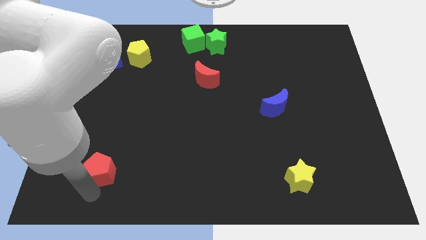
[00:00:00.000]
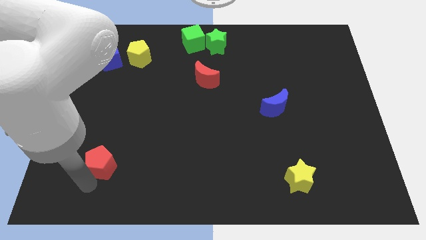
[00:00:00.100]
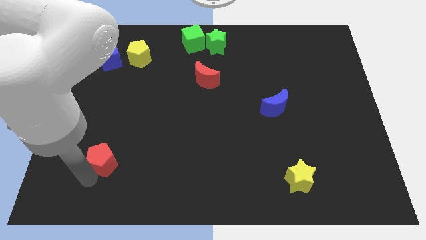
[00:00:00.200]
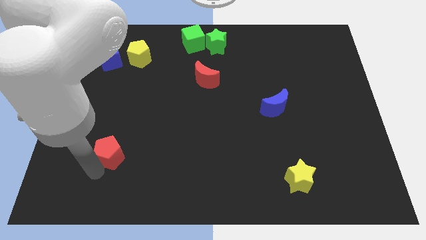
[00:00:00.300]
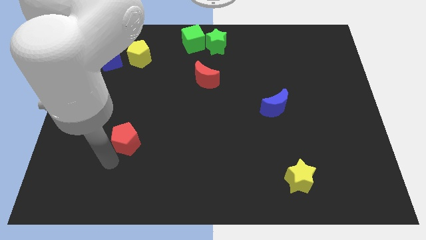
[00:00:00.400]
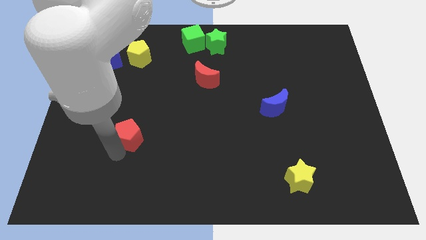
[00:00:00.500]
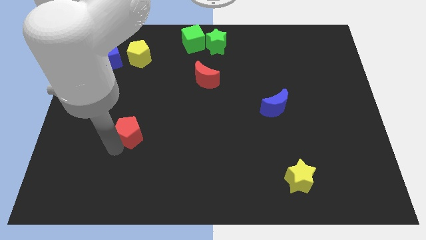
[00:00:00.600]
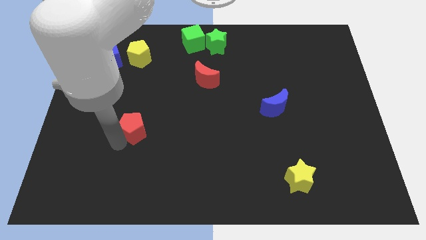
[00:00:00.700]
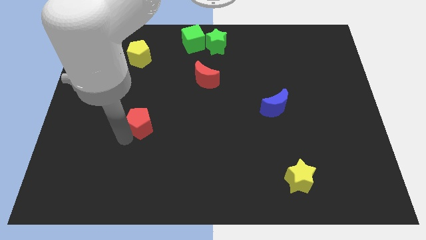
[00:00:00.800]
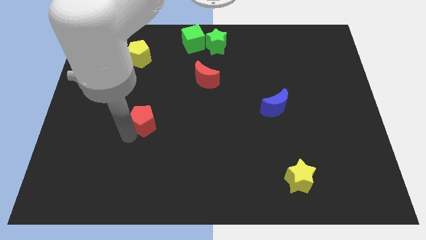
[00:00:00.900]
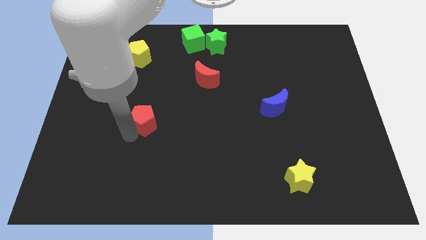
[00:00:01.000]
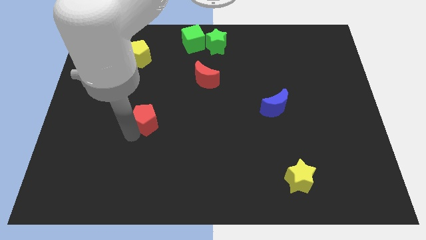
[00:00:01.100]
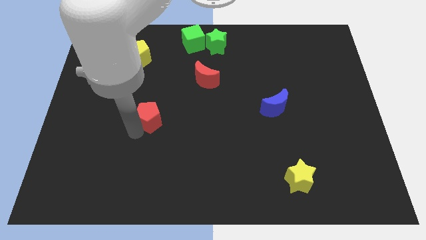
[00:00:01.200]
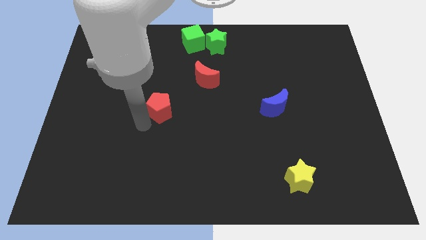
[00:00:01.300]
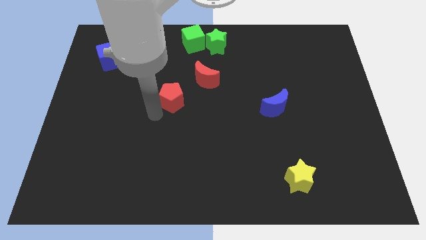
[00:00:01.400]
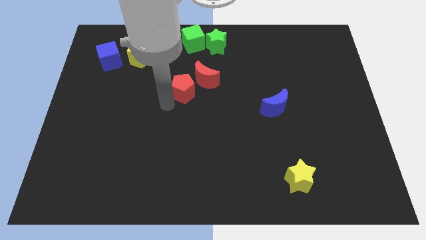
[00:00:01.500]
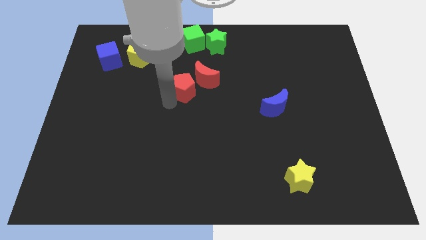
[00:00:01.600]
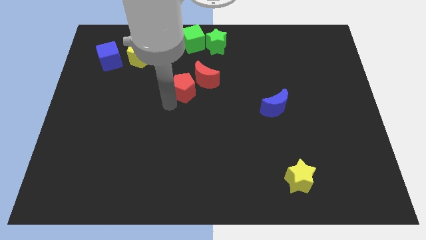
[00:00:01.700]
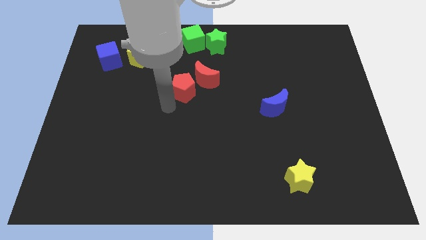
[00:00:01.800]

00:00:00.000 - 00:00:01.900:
place the red pentagon to the left of red moon

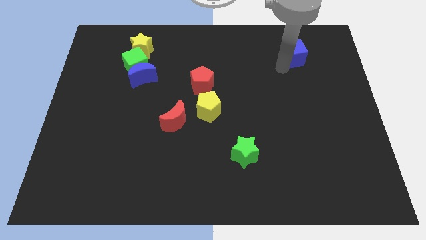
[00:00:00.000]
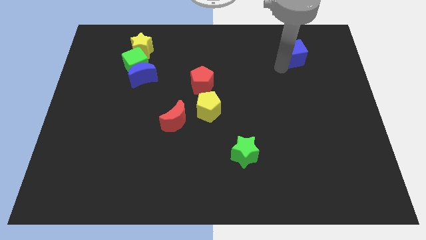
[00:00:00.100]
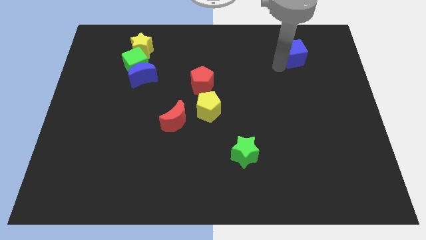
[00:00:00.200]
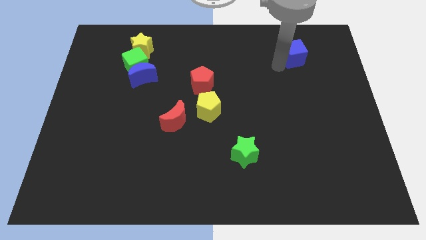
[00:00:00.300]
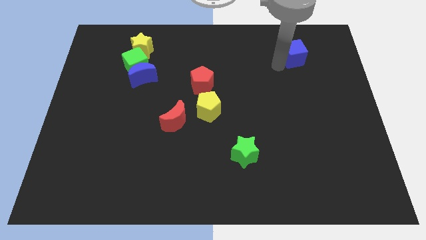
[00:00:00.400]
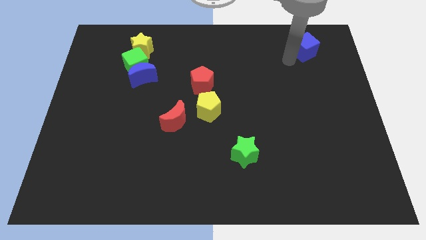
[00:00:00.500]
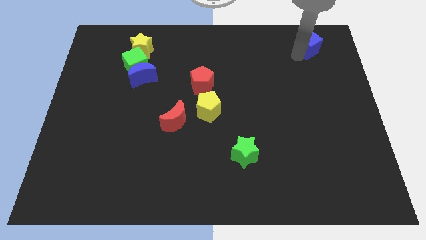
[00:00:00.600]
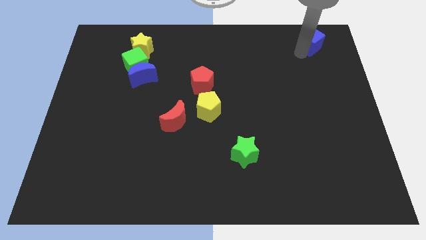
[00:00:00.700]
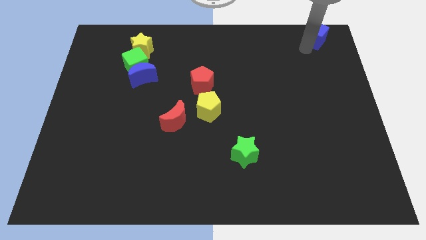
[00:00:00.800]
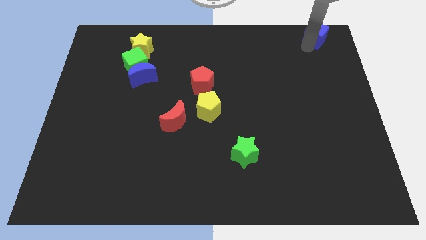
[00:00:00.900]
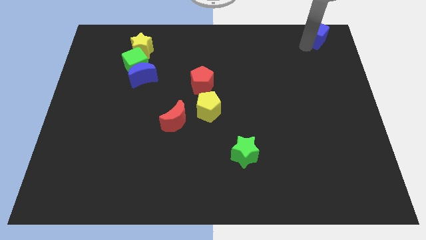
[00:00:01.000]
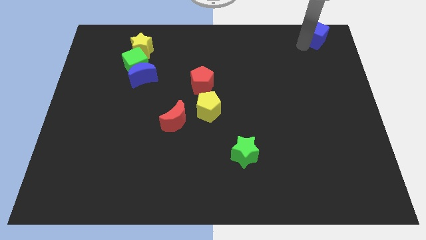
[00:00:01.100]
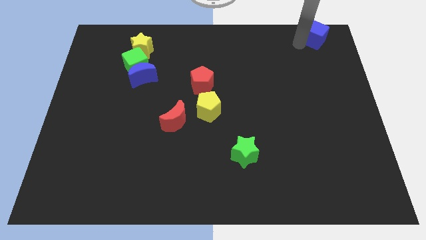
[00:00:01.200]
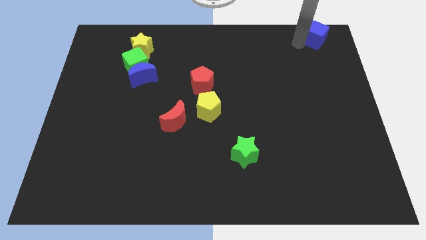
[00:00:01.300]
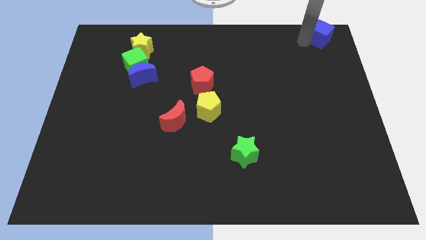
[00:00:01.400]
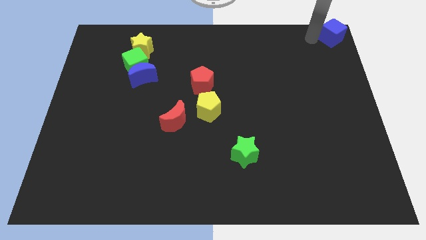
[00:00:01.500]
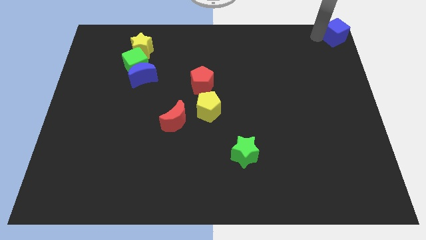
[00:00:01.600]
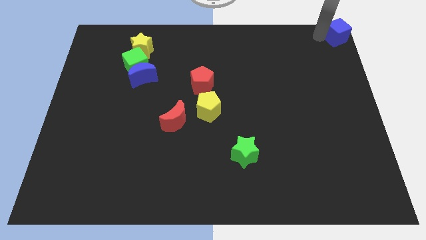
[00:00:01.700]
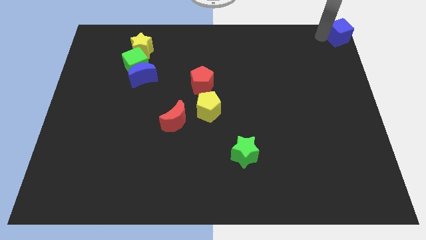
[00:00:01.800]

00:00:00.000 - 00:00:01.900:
push the blue cube to the top right corner of the board

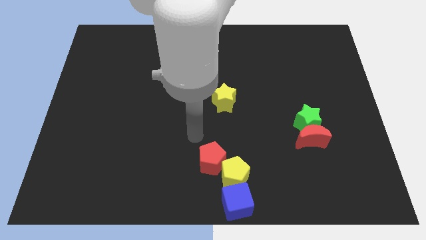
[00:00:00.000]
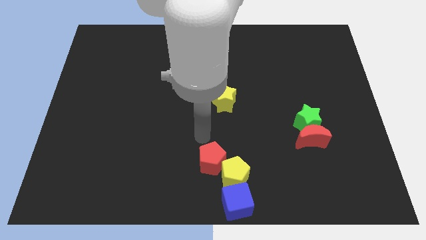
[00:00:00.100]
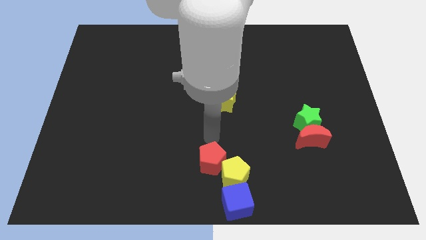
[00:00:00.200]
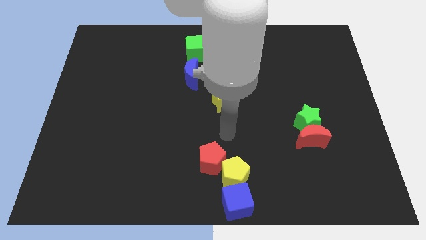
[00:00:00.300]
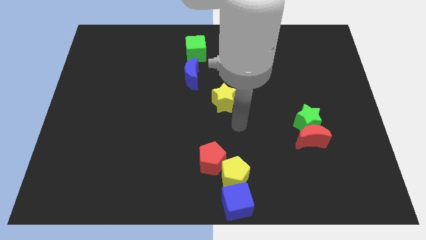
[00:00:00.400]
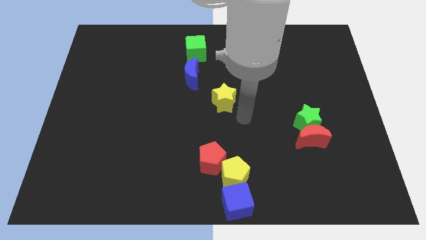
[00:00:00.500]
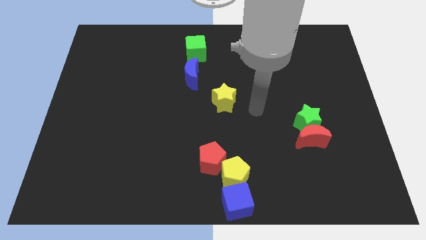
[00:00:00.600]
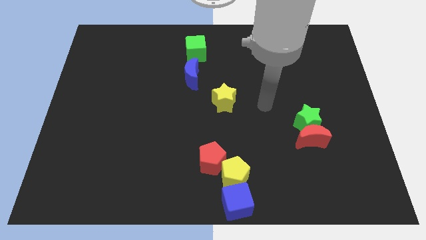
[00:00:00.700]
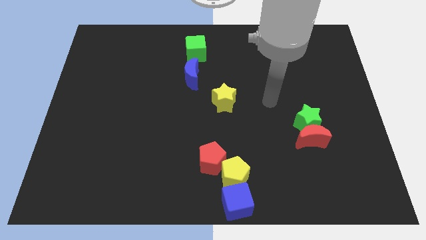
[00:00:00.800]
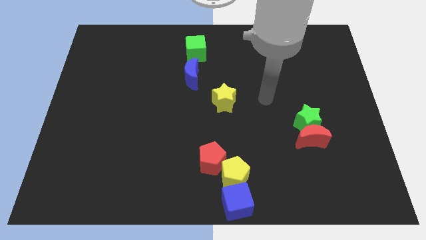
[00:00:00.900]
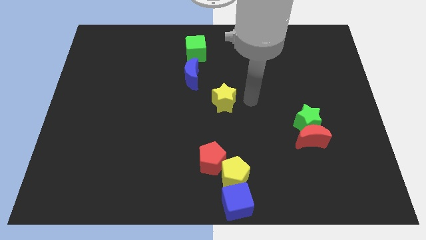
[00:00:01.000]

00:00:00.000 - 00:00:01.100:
place your arm at the right of the yellow star

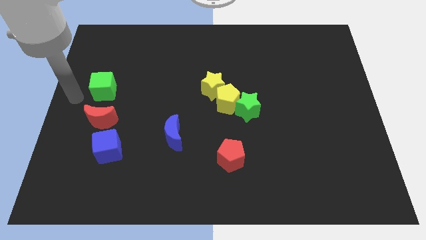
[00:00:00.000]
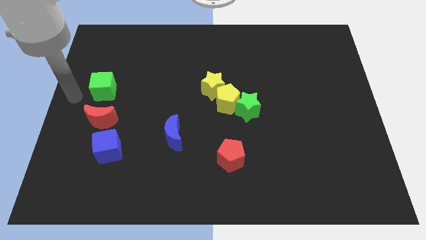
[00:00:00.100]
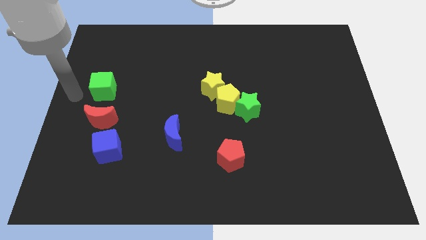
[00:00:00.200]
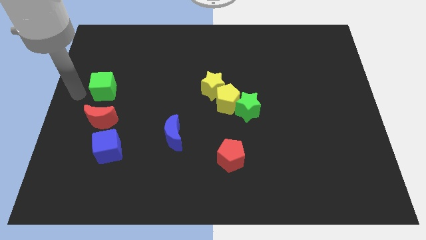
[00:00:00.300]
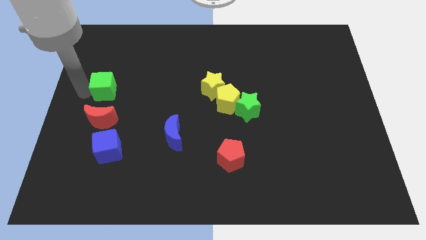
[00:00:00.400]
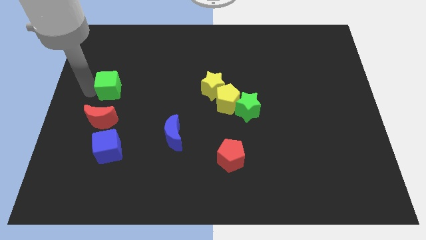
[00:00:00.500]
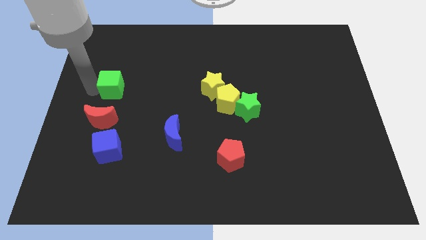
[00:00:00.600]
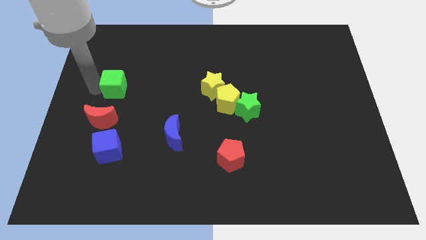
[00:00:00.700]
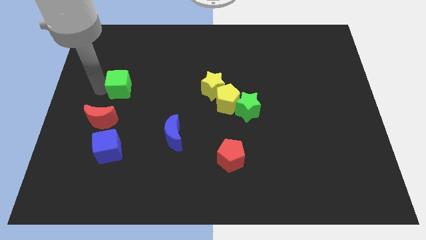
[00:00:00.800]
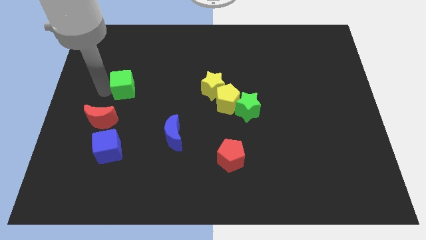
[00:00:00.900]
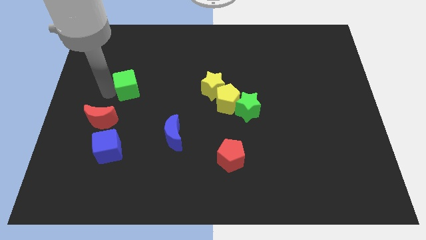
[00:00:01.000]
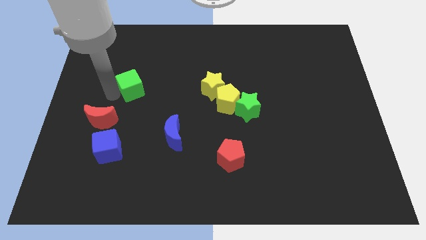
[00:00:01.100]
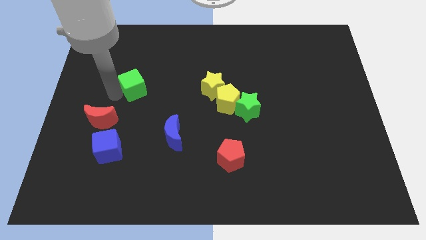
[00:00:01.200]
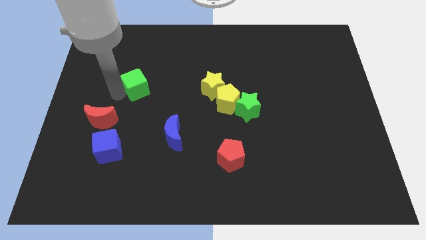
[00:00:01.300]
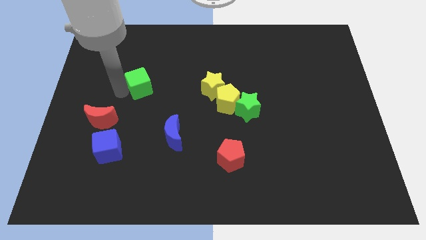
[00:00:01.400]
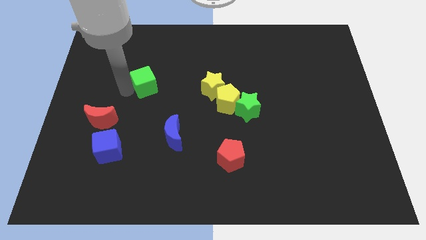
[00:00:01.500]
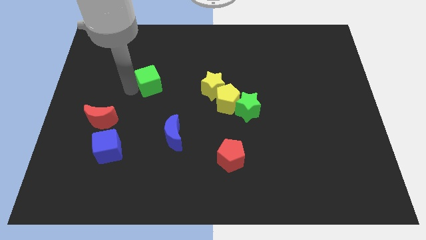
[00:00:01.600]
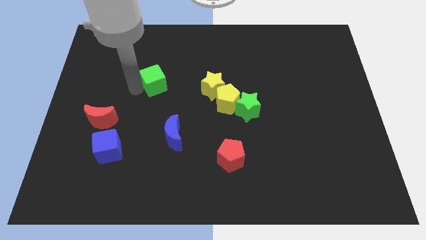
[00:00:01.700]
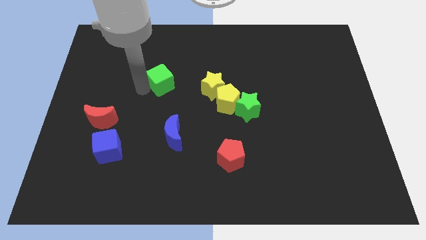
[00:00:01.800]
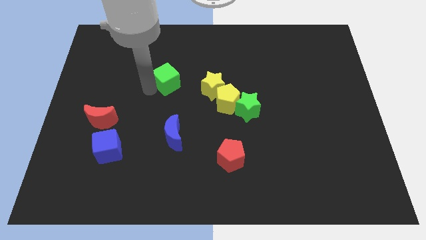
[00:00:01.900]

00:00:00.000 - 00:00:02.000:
move the green cube above blue moon

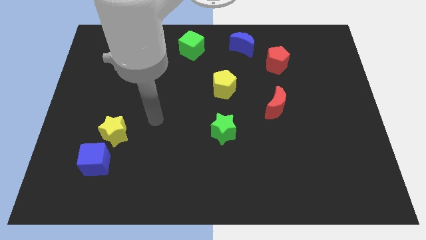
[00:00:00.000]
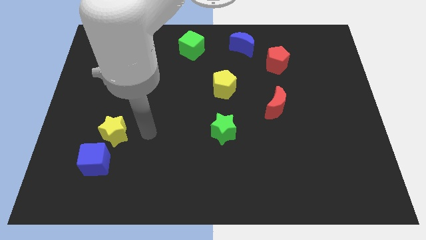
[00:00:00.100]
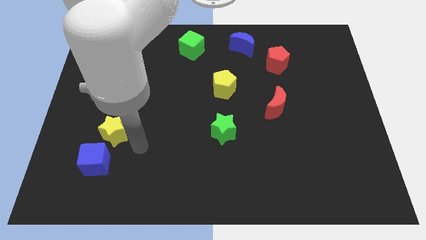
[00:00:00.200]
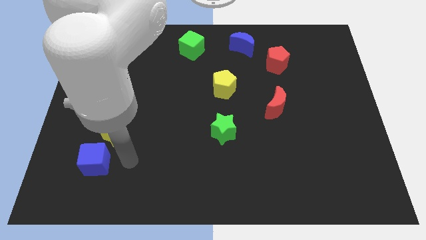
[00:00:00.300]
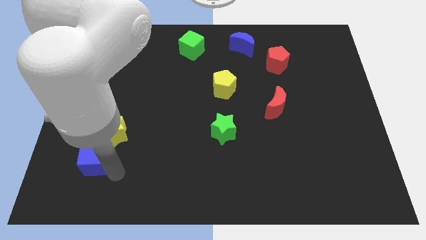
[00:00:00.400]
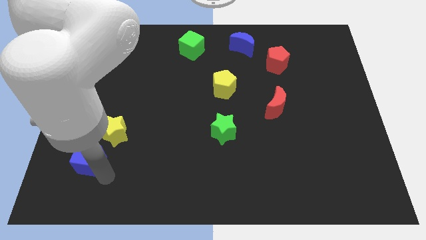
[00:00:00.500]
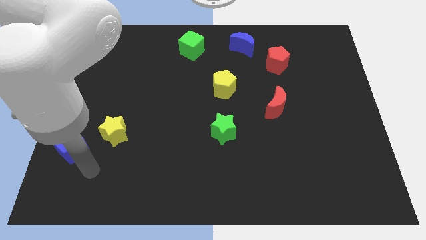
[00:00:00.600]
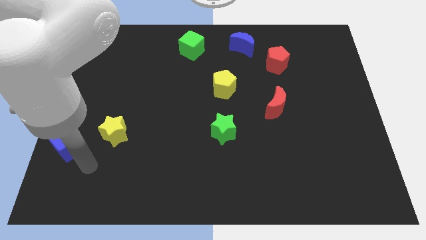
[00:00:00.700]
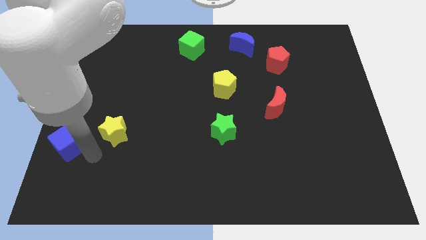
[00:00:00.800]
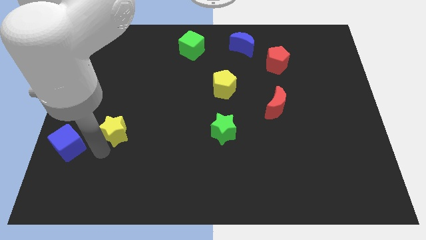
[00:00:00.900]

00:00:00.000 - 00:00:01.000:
push the blue cube slightly to the left

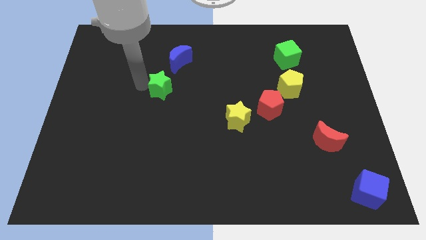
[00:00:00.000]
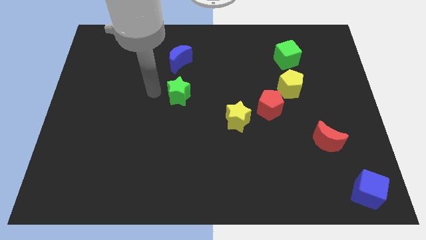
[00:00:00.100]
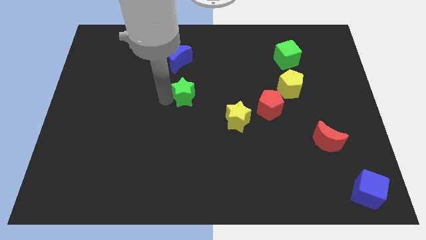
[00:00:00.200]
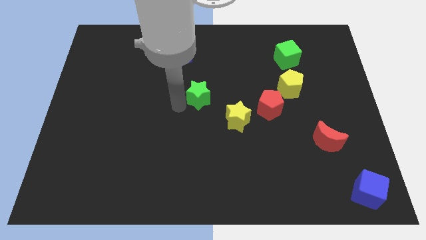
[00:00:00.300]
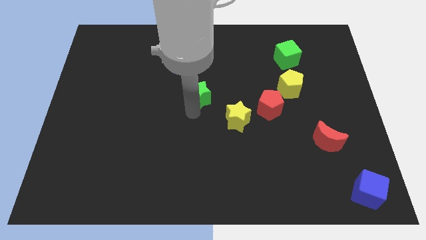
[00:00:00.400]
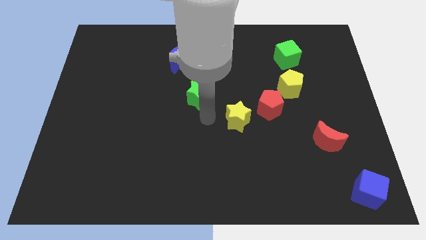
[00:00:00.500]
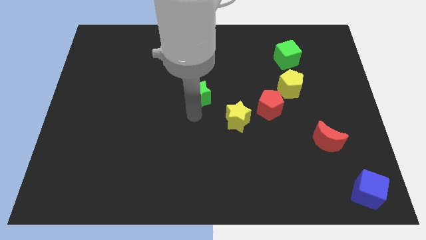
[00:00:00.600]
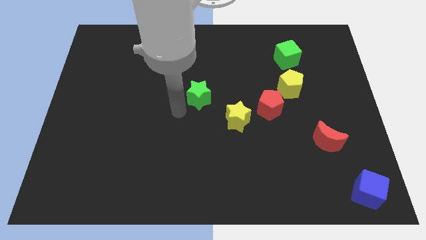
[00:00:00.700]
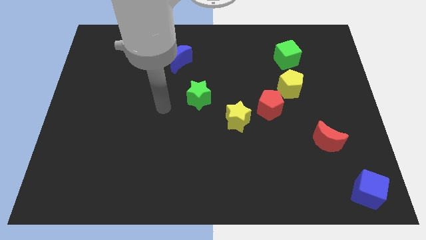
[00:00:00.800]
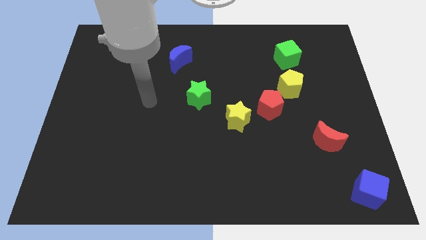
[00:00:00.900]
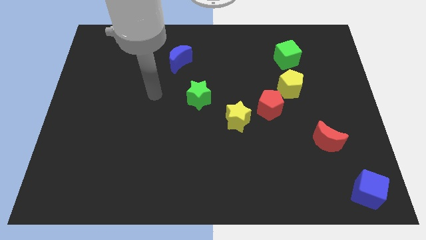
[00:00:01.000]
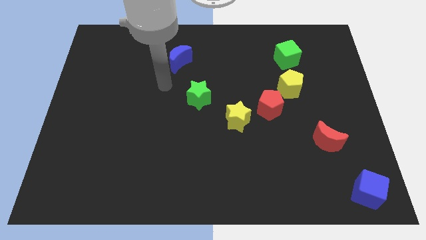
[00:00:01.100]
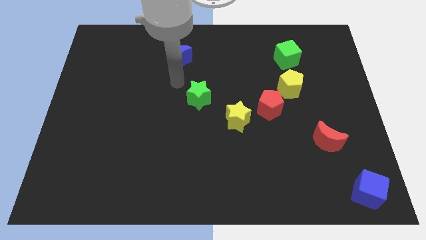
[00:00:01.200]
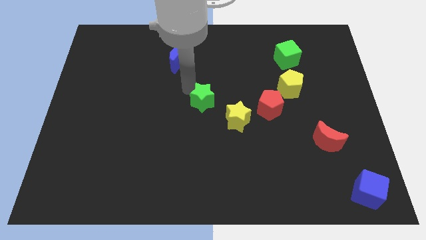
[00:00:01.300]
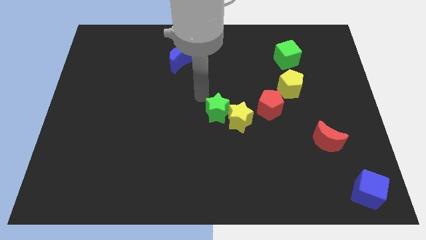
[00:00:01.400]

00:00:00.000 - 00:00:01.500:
place the green star at the center of the board
